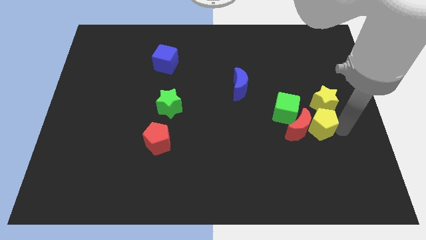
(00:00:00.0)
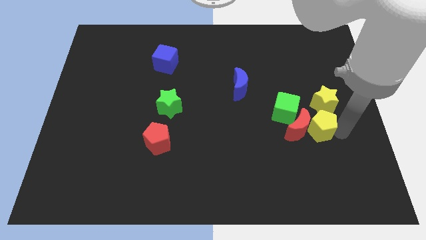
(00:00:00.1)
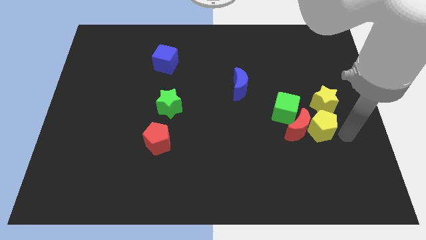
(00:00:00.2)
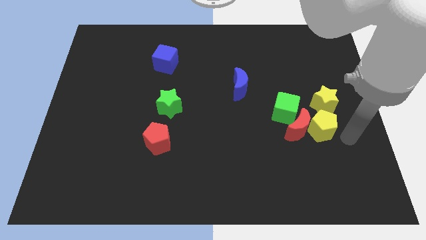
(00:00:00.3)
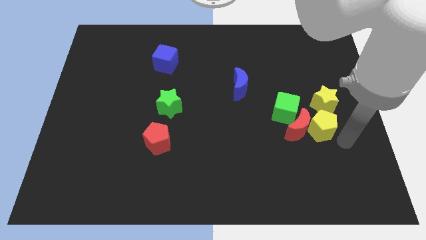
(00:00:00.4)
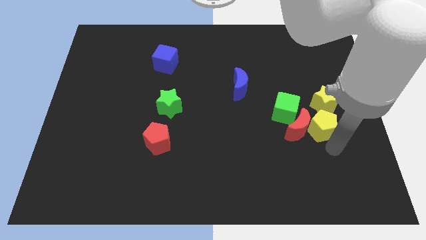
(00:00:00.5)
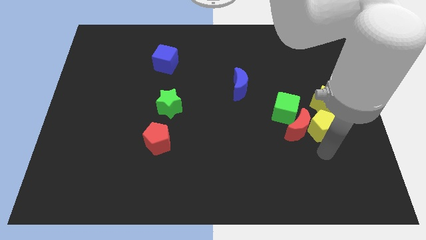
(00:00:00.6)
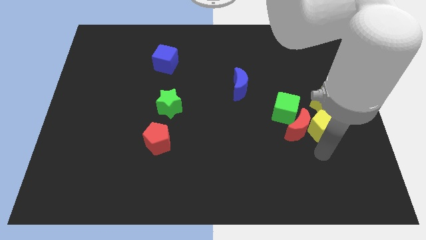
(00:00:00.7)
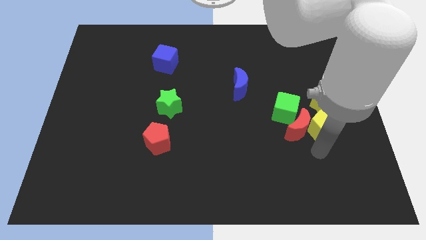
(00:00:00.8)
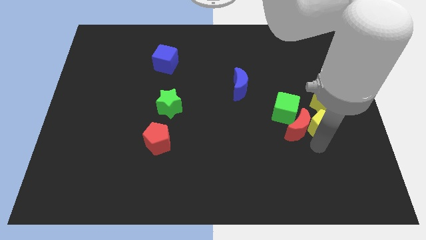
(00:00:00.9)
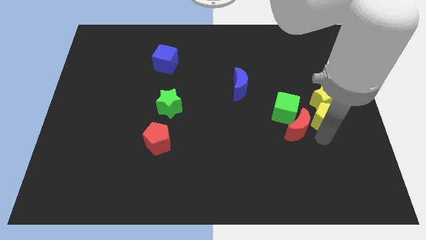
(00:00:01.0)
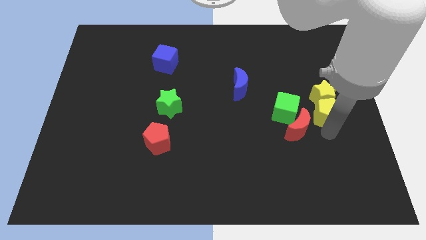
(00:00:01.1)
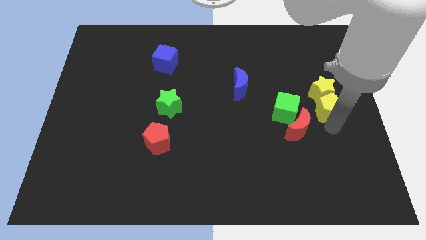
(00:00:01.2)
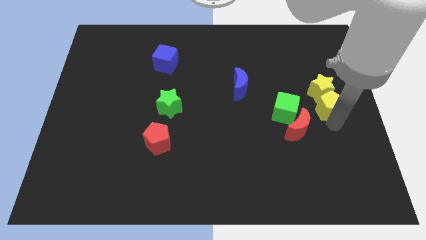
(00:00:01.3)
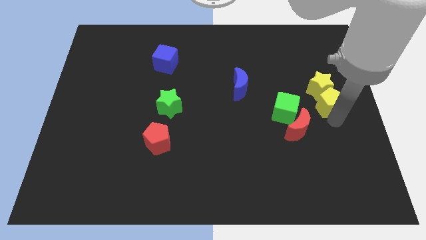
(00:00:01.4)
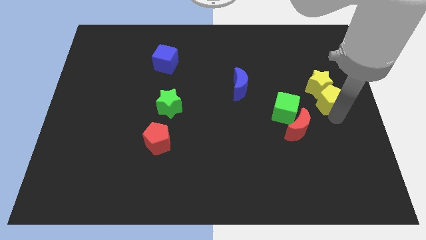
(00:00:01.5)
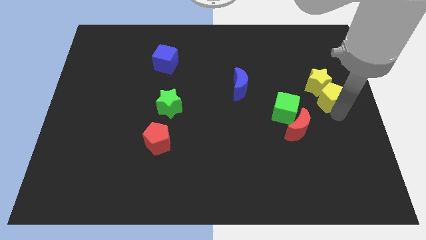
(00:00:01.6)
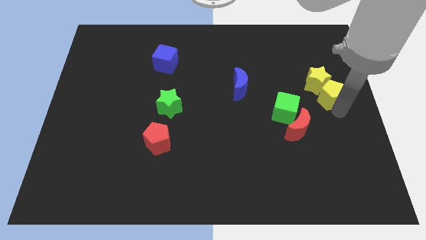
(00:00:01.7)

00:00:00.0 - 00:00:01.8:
separate the yellow pentagon from the red crescent

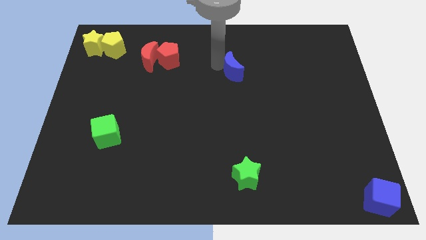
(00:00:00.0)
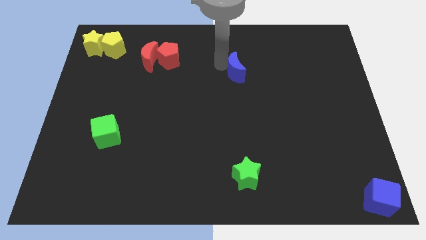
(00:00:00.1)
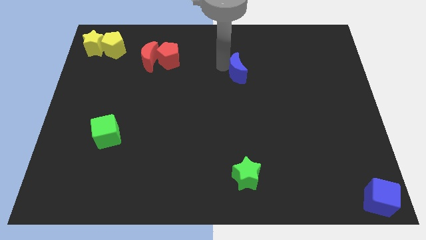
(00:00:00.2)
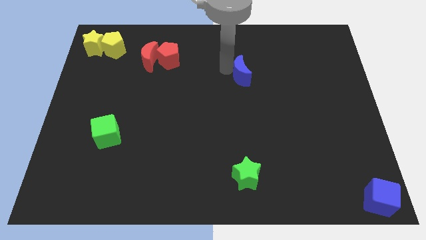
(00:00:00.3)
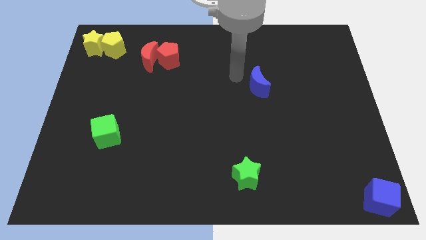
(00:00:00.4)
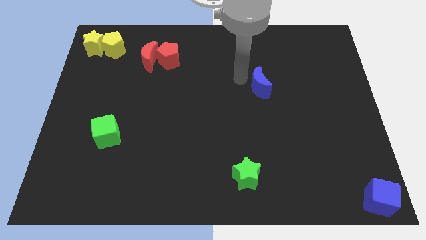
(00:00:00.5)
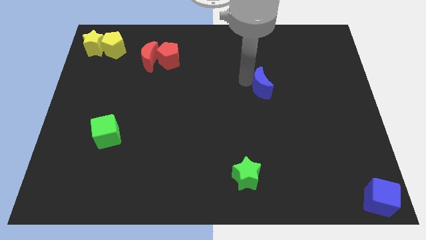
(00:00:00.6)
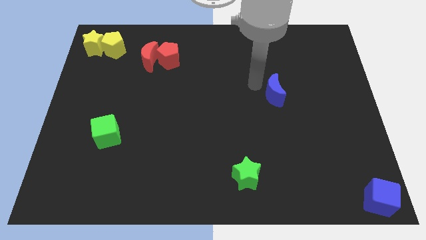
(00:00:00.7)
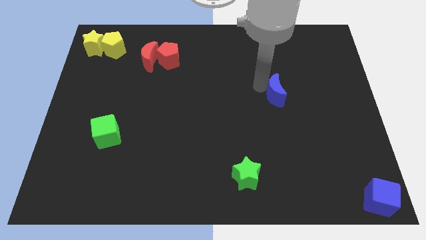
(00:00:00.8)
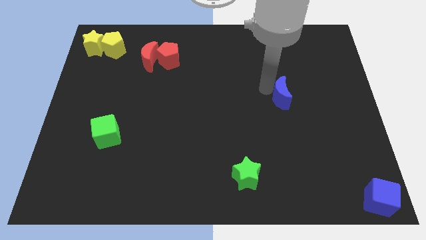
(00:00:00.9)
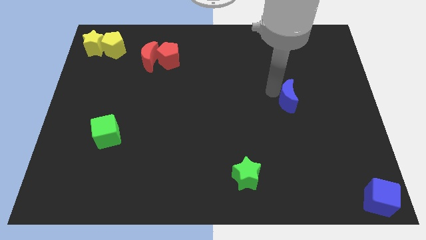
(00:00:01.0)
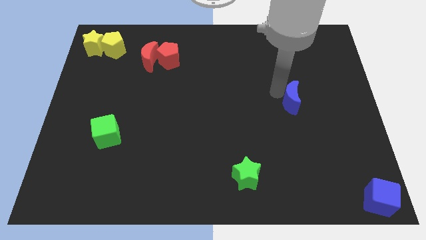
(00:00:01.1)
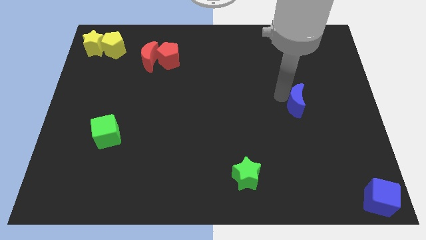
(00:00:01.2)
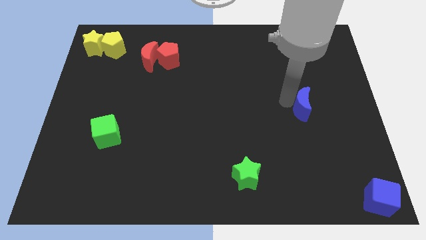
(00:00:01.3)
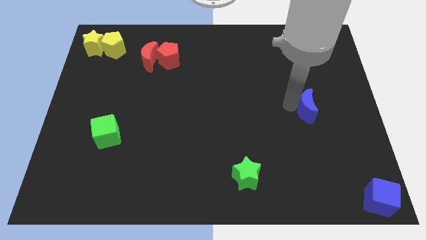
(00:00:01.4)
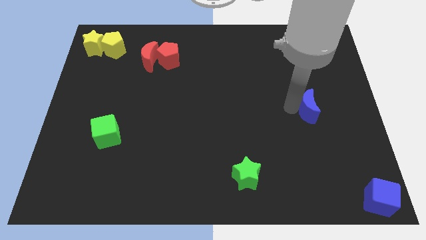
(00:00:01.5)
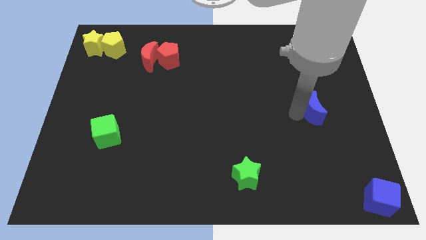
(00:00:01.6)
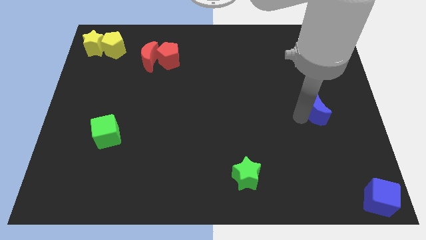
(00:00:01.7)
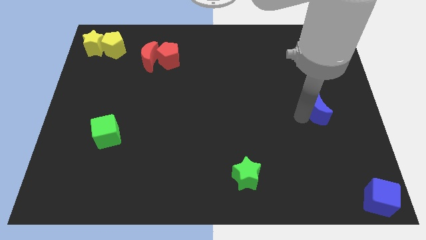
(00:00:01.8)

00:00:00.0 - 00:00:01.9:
push the blue crescent towards the bottom right corner of the board

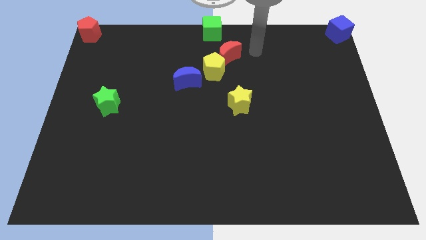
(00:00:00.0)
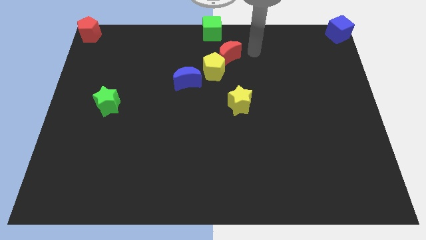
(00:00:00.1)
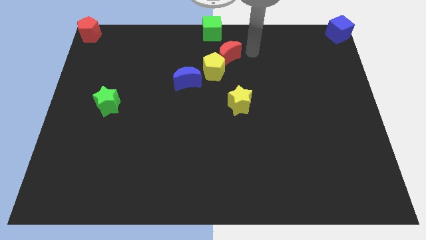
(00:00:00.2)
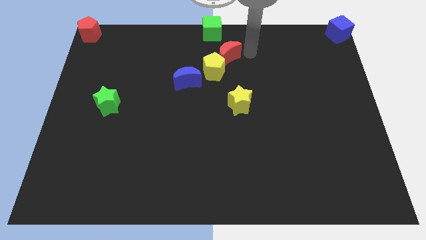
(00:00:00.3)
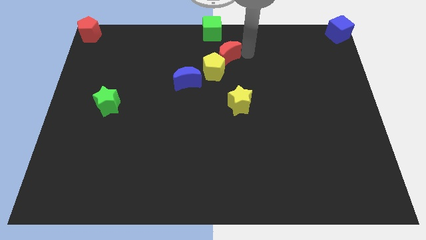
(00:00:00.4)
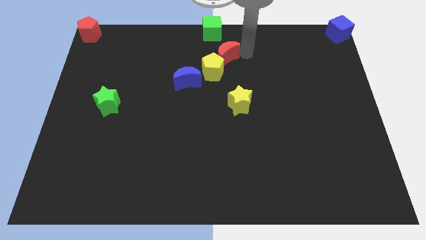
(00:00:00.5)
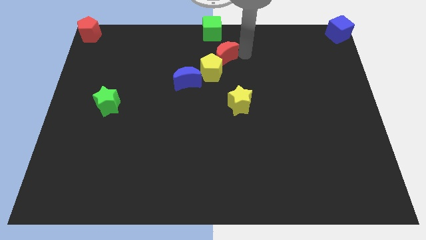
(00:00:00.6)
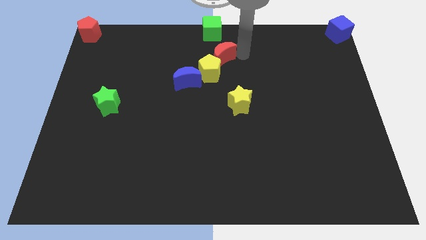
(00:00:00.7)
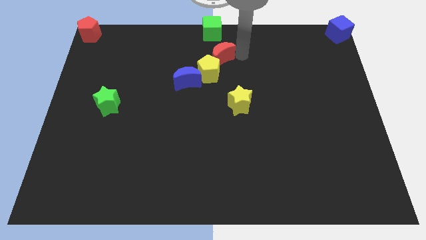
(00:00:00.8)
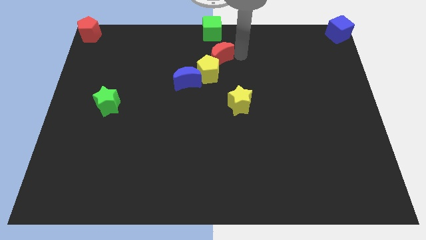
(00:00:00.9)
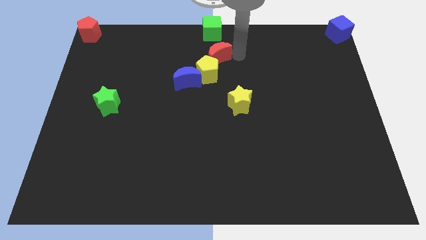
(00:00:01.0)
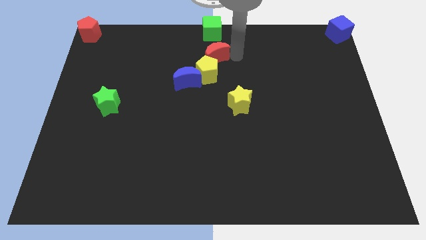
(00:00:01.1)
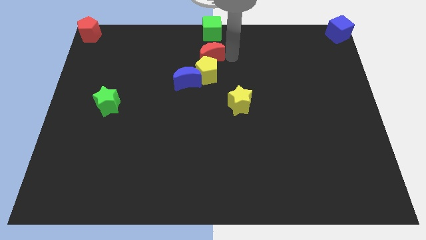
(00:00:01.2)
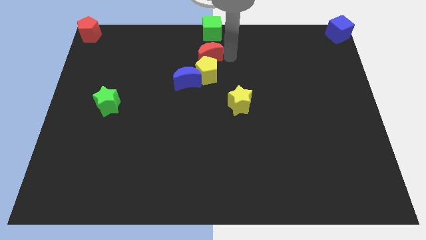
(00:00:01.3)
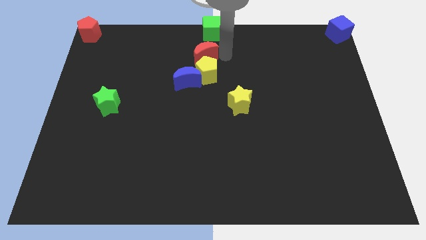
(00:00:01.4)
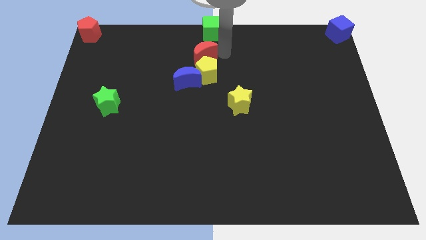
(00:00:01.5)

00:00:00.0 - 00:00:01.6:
push the red moon in between the green cube and yellow pentagon

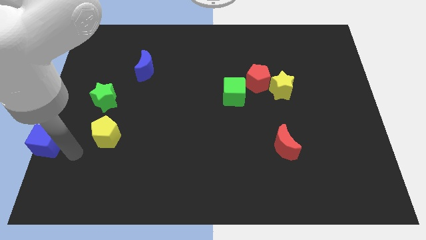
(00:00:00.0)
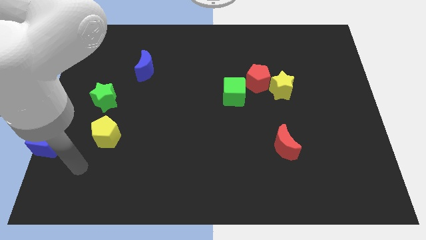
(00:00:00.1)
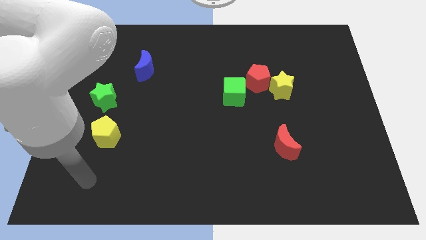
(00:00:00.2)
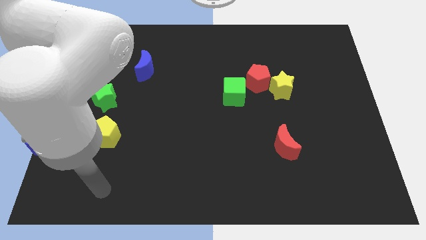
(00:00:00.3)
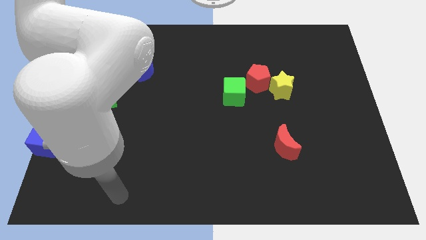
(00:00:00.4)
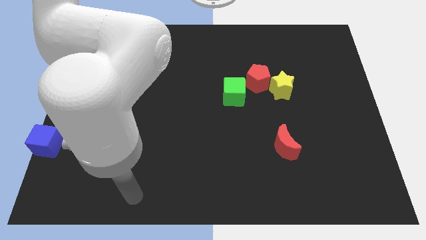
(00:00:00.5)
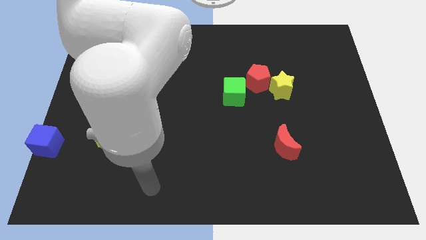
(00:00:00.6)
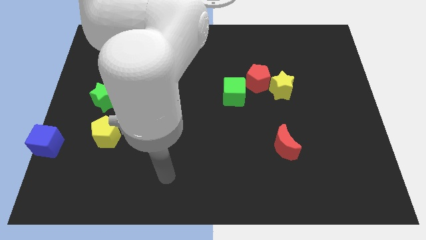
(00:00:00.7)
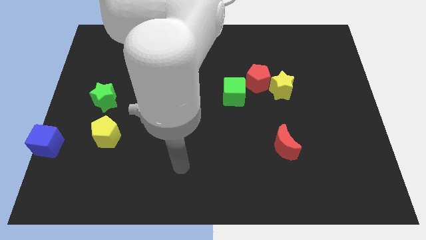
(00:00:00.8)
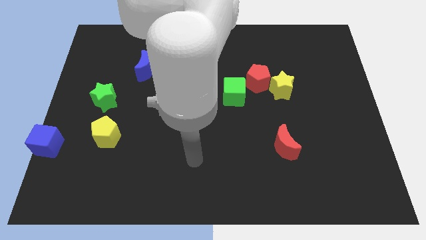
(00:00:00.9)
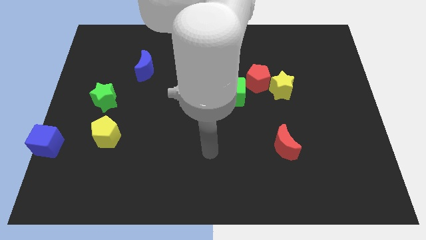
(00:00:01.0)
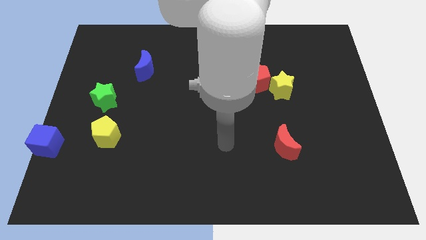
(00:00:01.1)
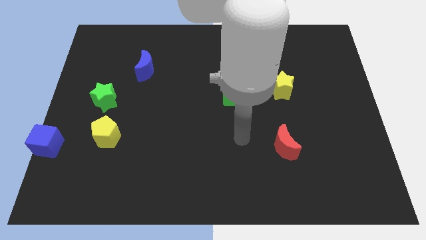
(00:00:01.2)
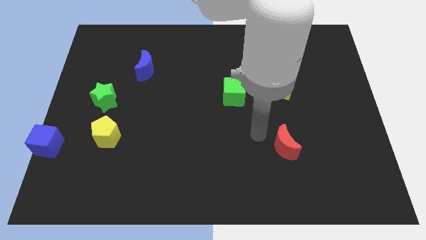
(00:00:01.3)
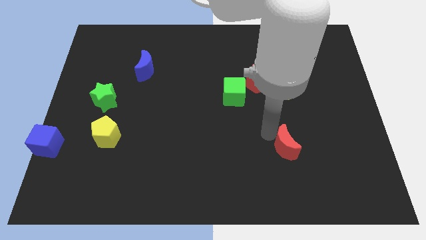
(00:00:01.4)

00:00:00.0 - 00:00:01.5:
place your arm to the top left of the red crescent

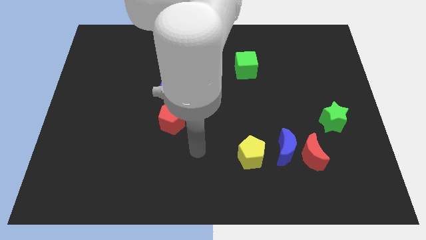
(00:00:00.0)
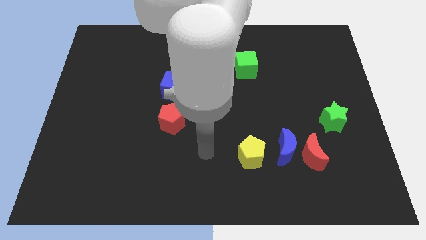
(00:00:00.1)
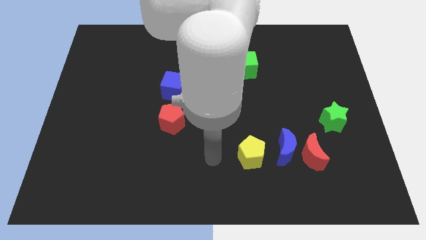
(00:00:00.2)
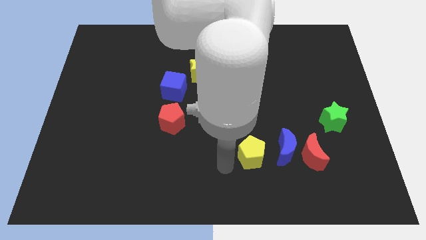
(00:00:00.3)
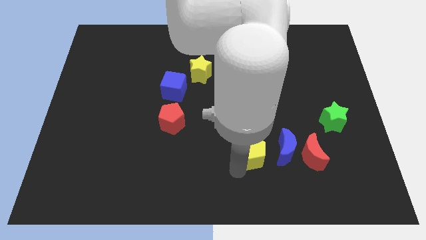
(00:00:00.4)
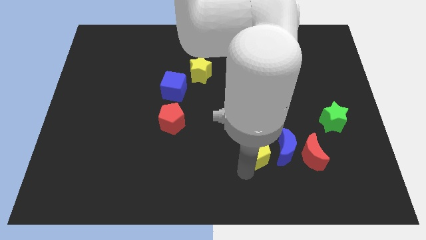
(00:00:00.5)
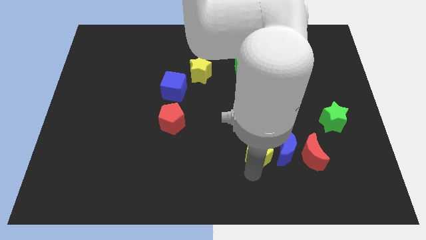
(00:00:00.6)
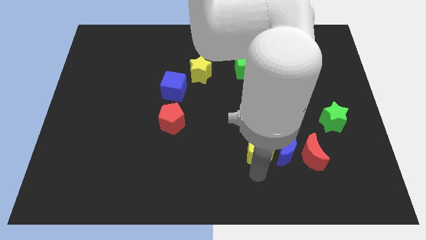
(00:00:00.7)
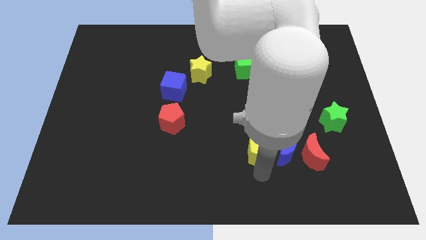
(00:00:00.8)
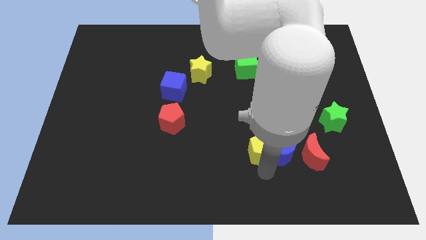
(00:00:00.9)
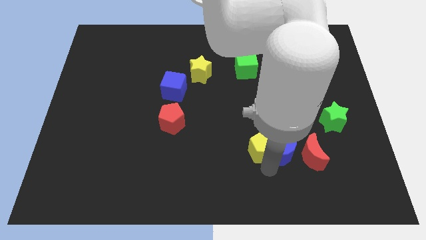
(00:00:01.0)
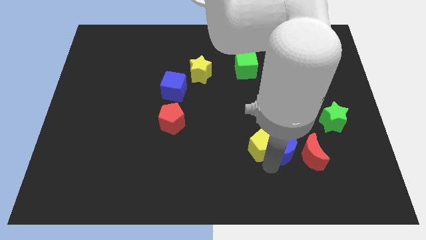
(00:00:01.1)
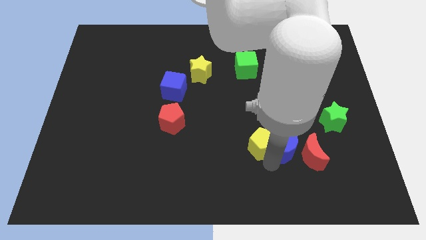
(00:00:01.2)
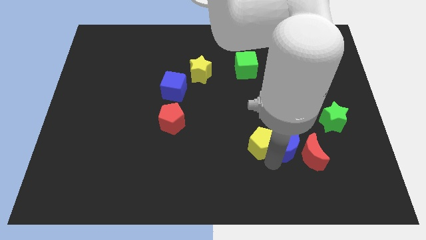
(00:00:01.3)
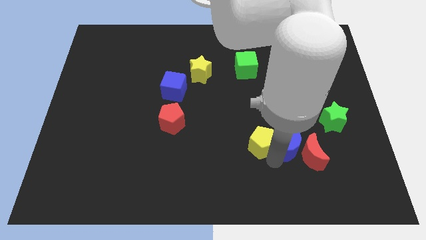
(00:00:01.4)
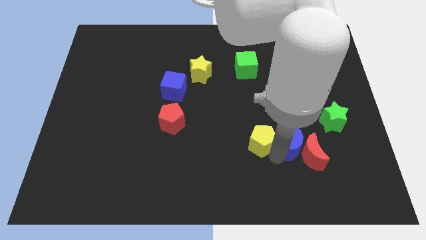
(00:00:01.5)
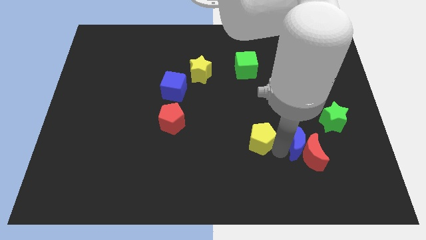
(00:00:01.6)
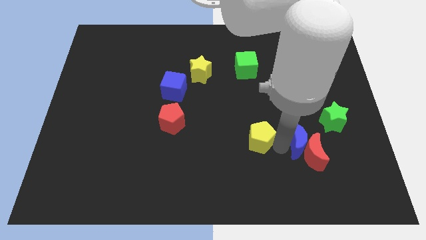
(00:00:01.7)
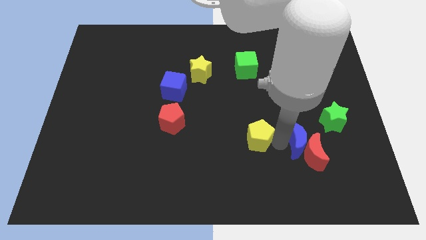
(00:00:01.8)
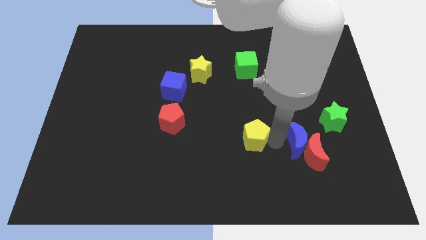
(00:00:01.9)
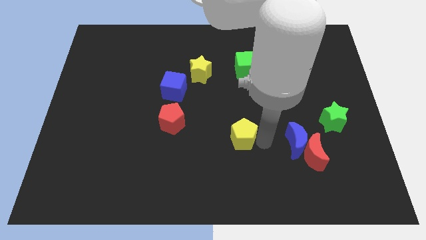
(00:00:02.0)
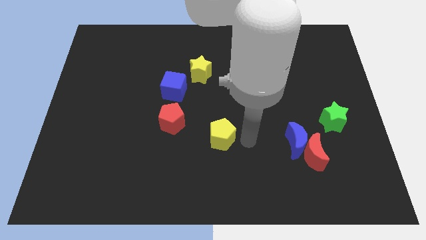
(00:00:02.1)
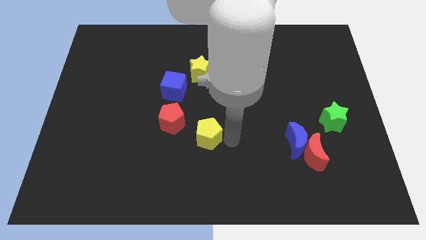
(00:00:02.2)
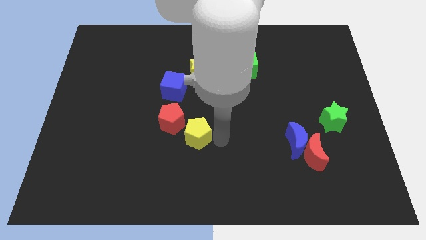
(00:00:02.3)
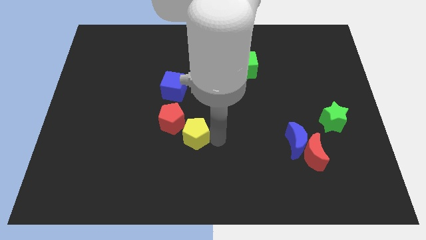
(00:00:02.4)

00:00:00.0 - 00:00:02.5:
move the yellow pentagon towards red pentagon
